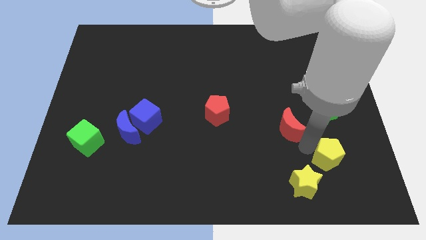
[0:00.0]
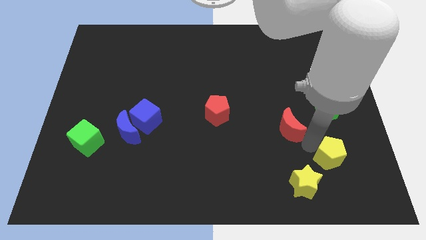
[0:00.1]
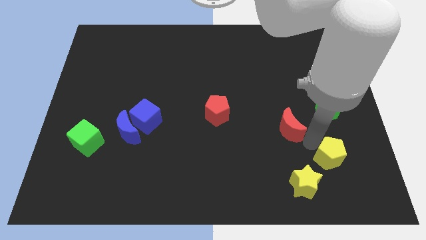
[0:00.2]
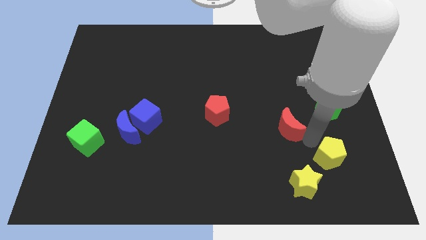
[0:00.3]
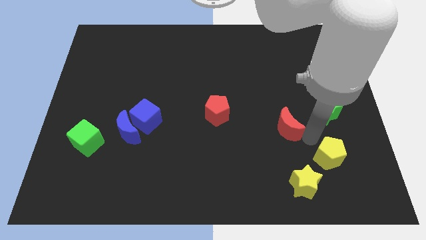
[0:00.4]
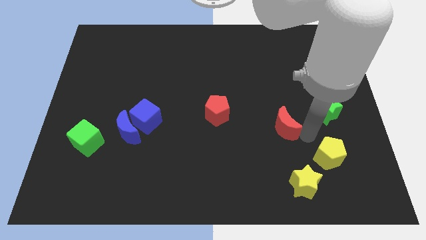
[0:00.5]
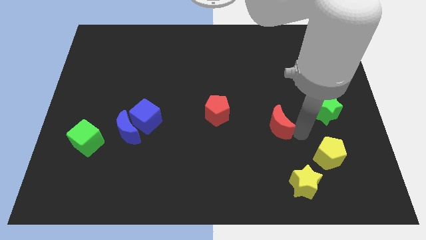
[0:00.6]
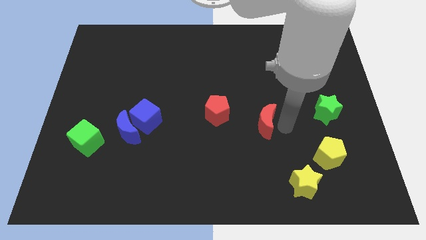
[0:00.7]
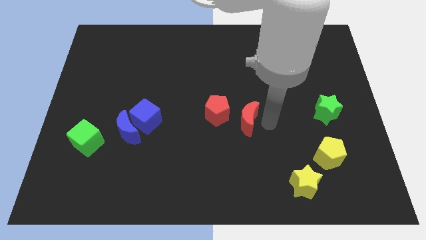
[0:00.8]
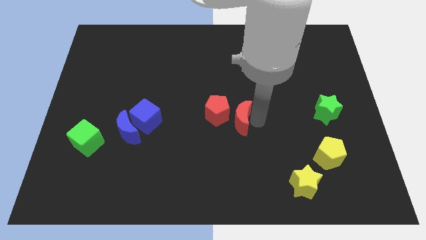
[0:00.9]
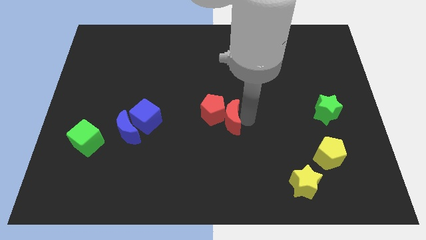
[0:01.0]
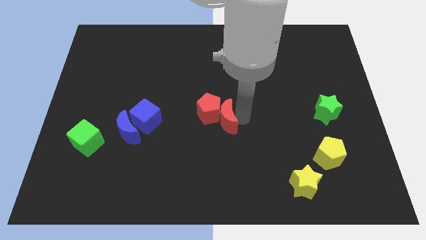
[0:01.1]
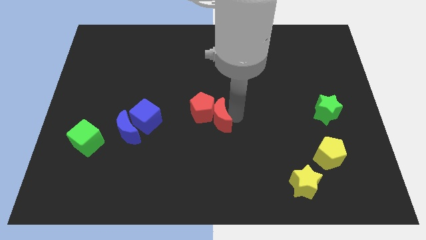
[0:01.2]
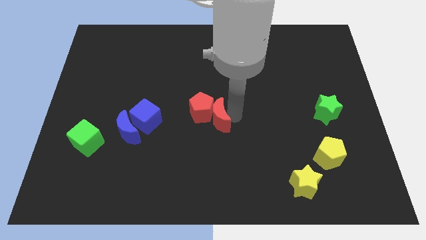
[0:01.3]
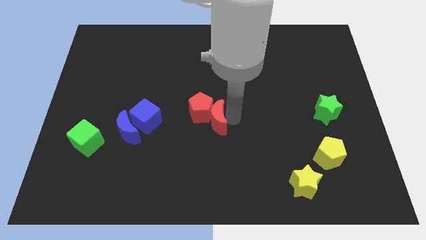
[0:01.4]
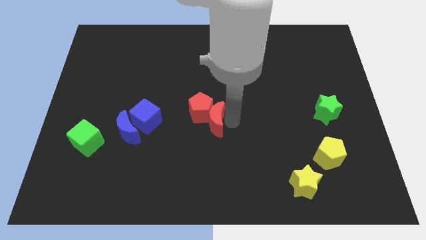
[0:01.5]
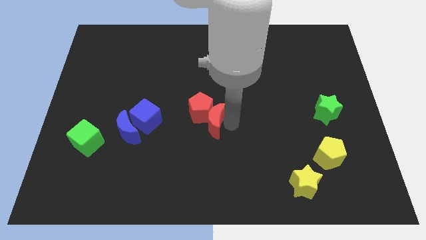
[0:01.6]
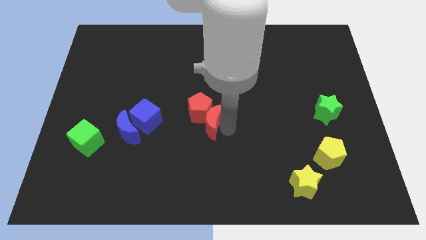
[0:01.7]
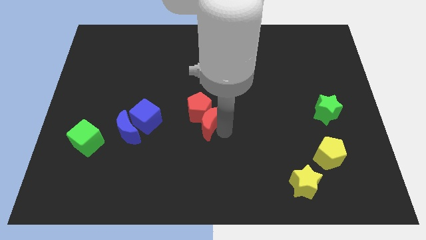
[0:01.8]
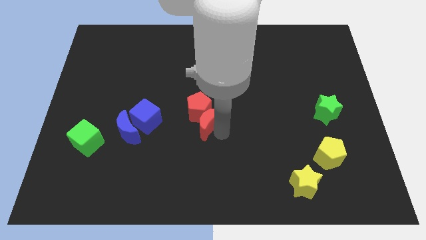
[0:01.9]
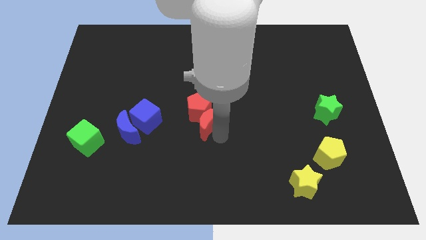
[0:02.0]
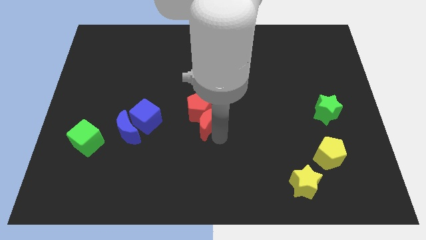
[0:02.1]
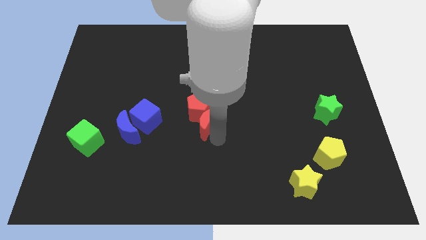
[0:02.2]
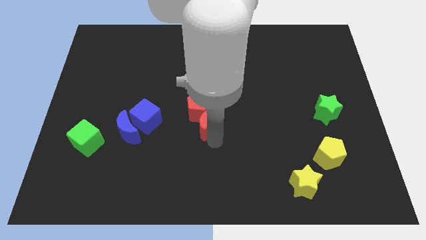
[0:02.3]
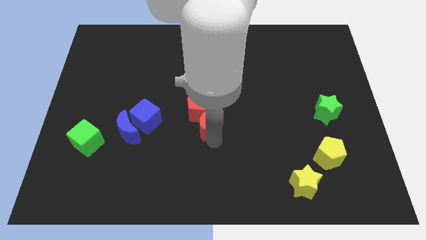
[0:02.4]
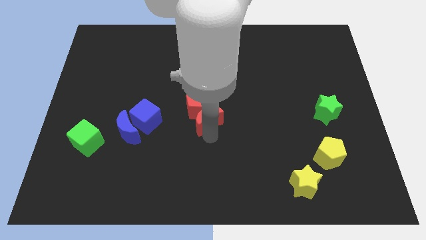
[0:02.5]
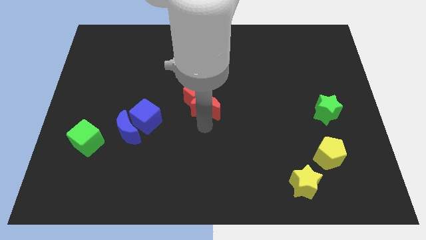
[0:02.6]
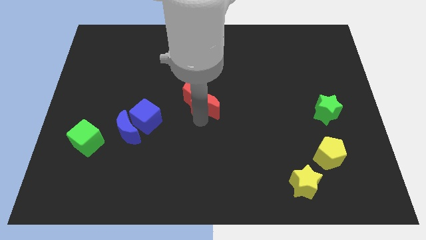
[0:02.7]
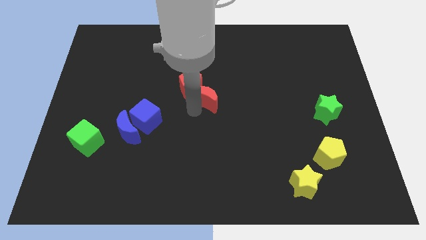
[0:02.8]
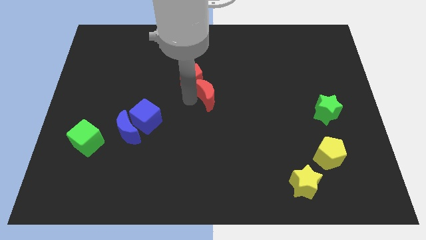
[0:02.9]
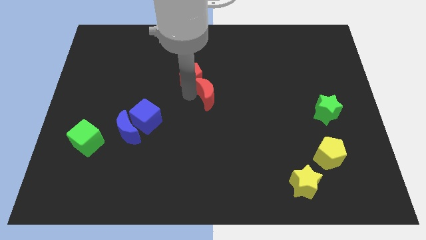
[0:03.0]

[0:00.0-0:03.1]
separate red crescent from yellow pentagon

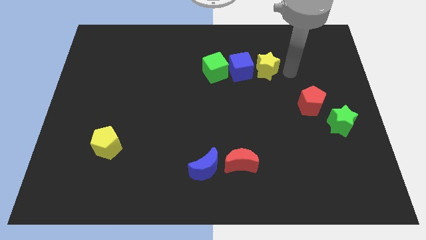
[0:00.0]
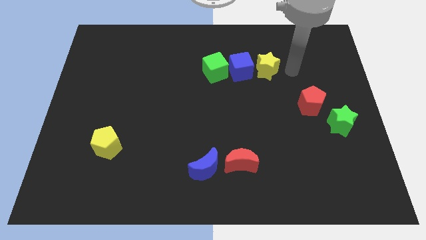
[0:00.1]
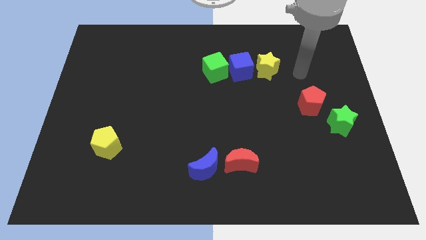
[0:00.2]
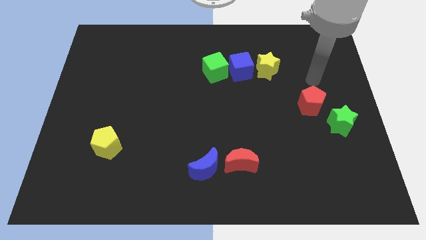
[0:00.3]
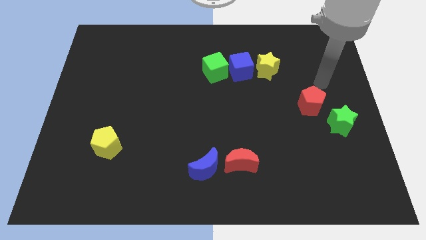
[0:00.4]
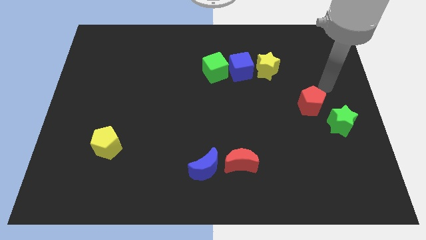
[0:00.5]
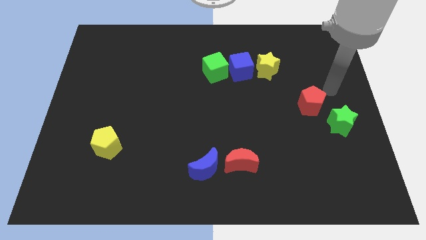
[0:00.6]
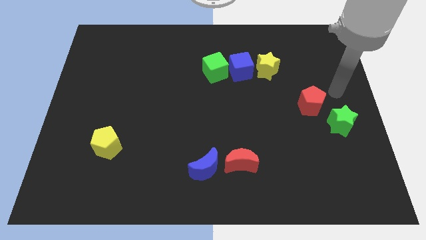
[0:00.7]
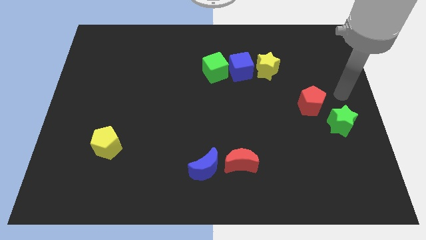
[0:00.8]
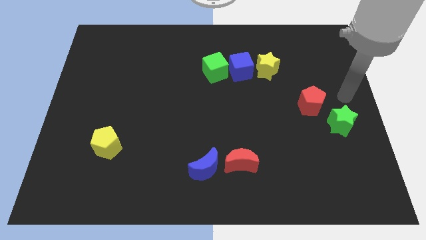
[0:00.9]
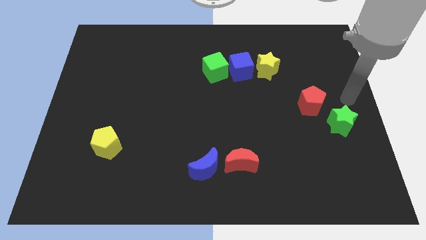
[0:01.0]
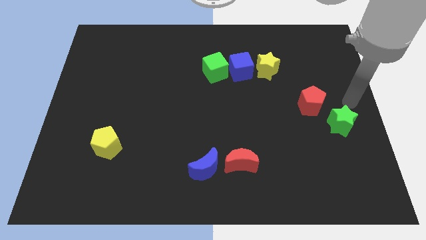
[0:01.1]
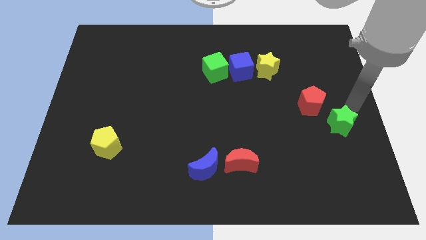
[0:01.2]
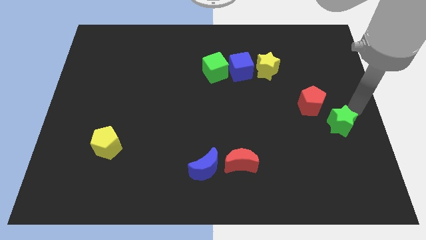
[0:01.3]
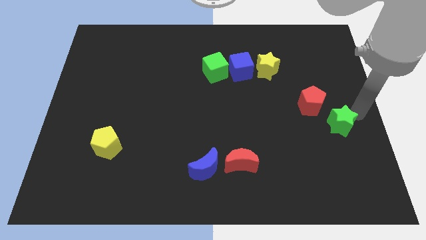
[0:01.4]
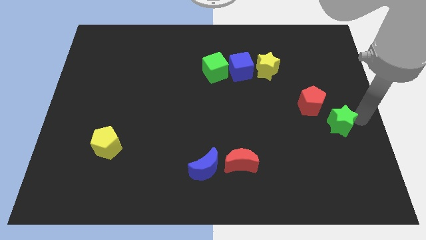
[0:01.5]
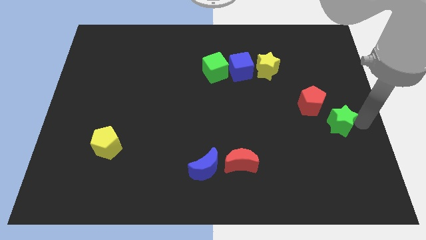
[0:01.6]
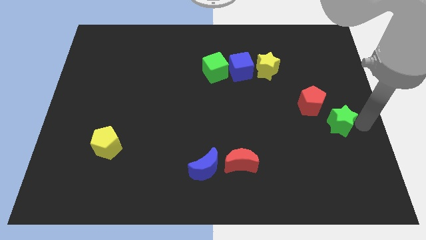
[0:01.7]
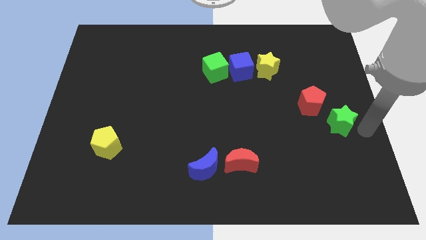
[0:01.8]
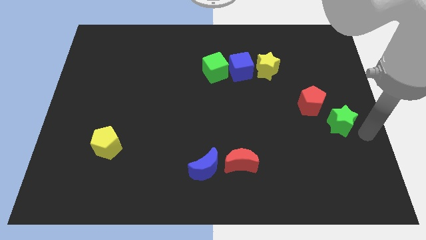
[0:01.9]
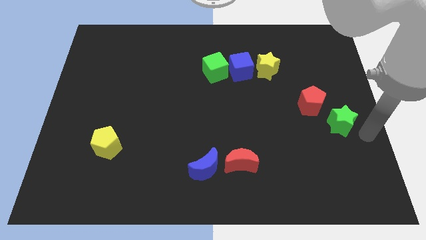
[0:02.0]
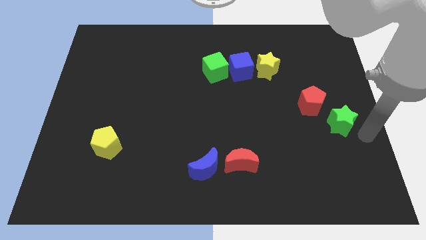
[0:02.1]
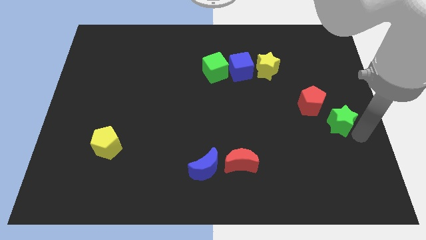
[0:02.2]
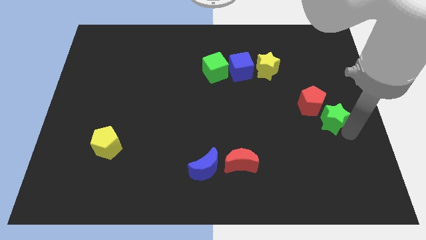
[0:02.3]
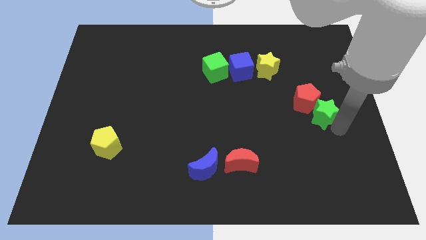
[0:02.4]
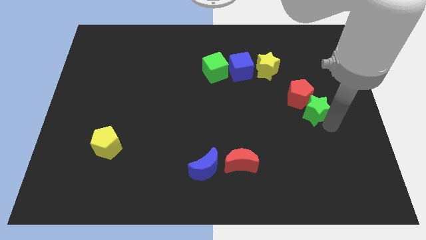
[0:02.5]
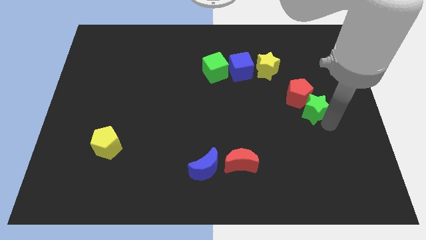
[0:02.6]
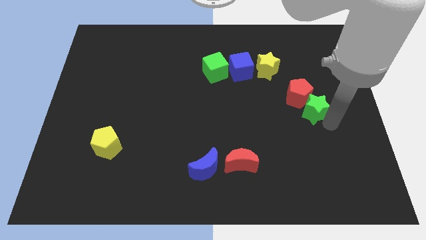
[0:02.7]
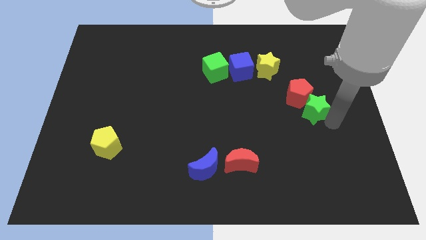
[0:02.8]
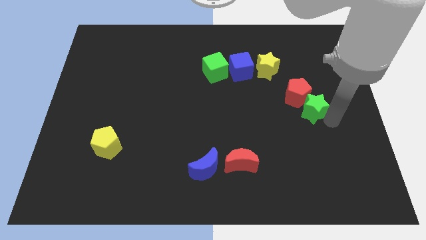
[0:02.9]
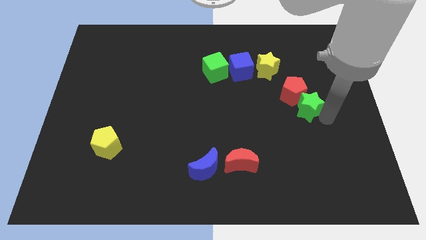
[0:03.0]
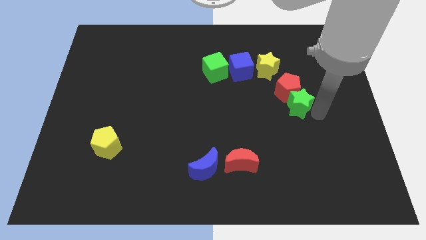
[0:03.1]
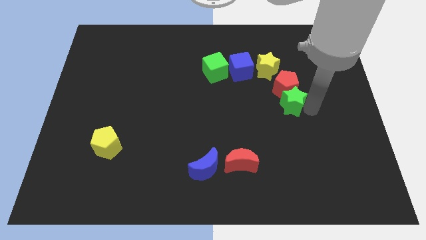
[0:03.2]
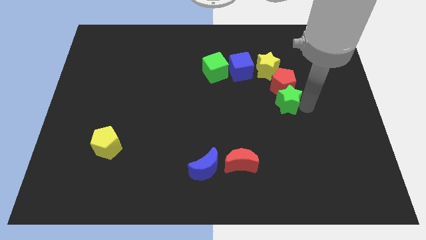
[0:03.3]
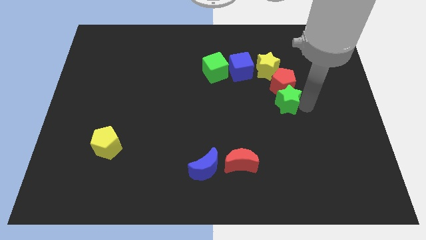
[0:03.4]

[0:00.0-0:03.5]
push the red pentagon with green star towards the yellow star

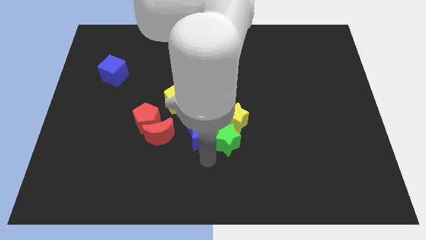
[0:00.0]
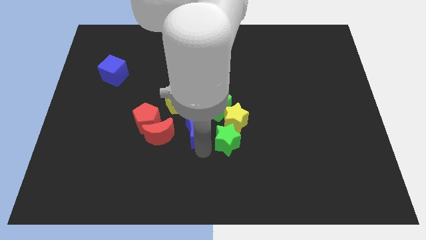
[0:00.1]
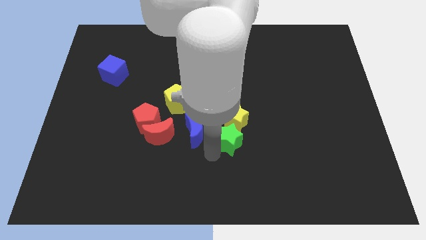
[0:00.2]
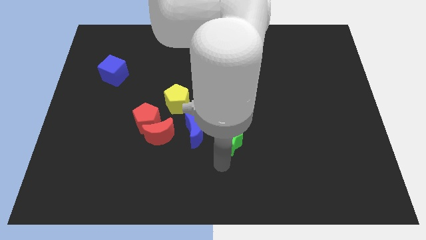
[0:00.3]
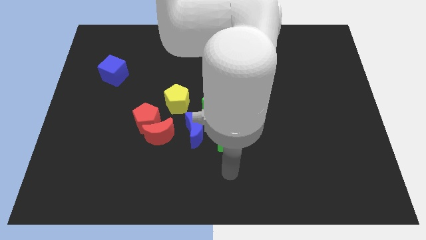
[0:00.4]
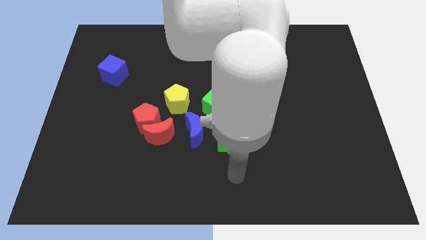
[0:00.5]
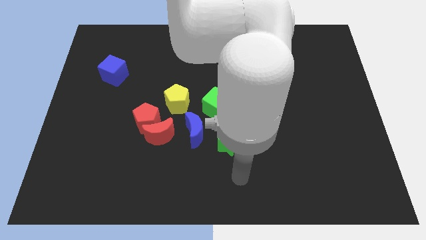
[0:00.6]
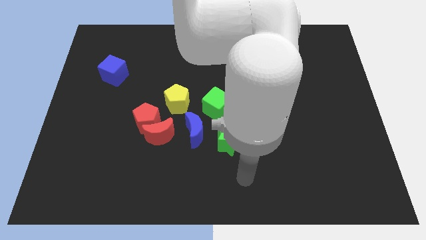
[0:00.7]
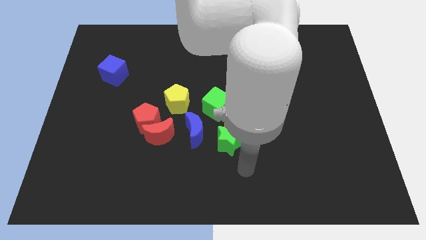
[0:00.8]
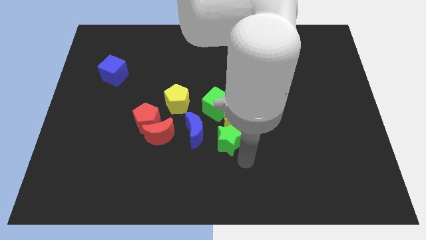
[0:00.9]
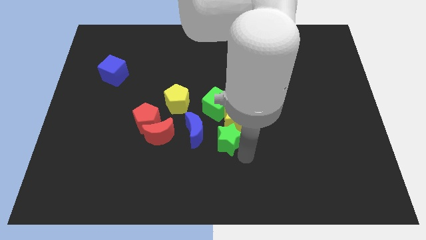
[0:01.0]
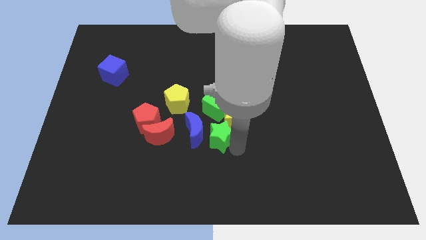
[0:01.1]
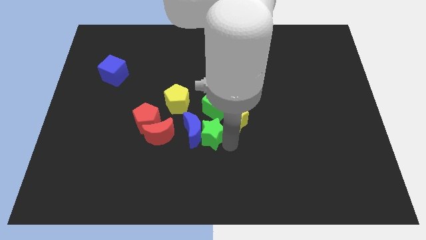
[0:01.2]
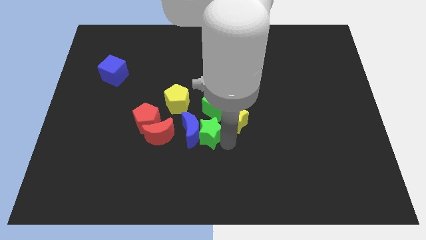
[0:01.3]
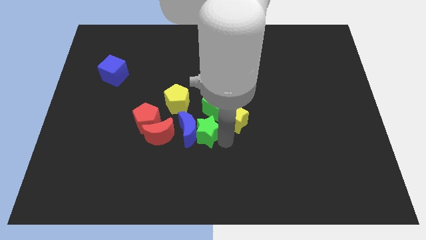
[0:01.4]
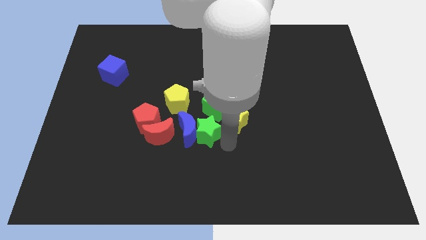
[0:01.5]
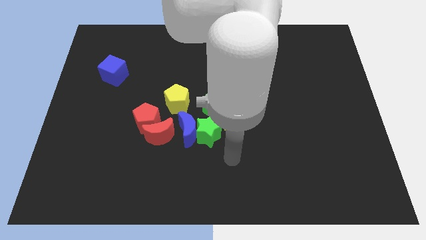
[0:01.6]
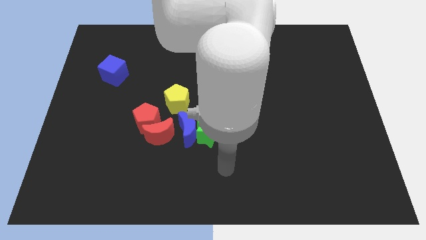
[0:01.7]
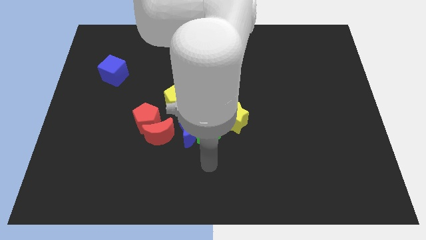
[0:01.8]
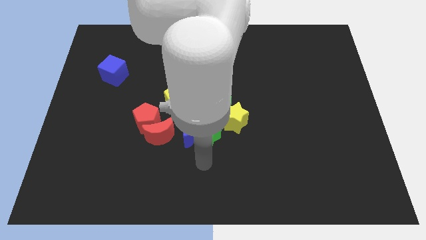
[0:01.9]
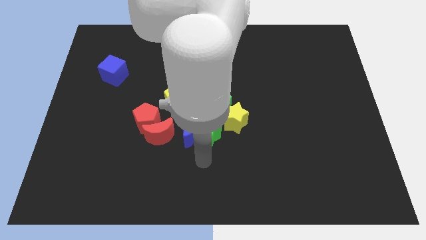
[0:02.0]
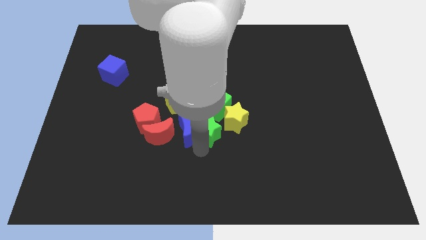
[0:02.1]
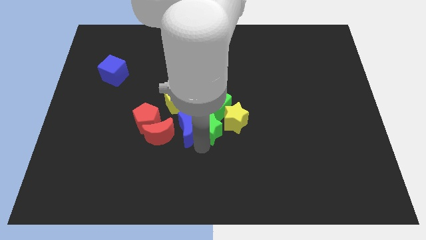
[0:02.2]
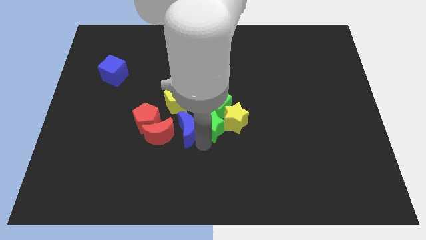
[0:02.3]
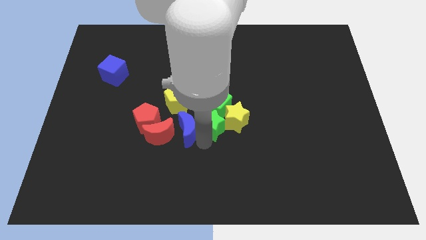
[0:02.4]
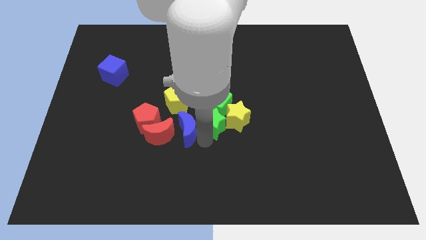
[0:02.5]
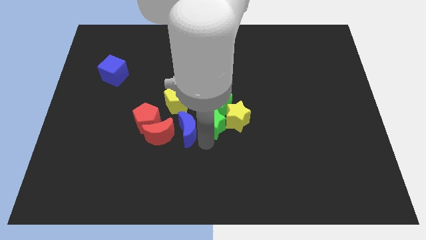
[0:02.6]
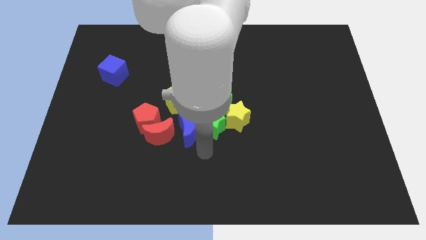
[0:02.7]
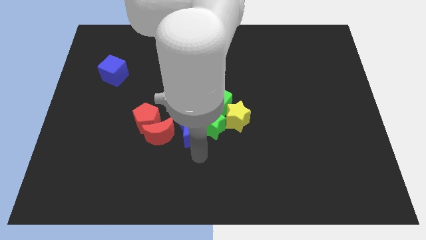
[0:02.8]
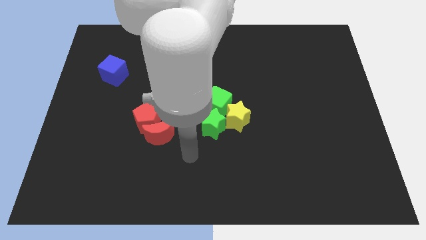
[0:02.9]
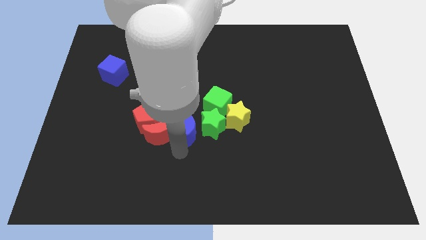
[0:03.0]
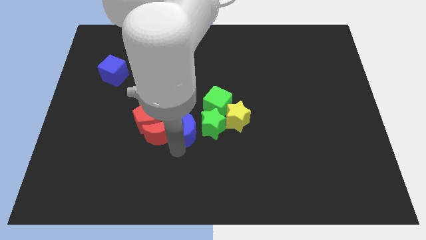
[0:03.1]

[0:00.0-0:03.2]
push the green star into the green cube
